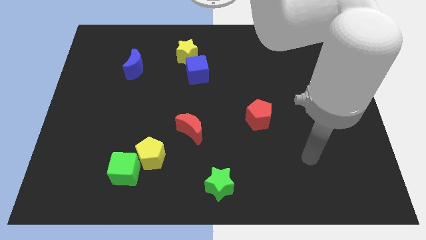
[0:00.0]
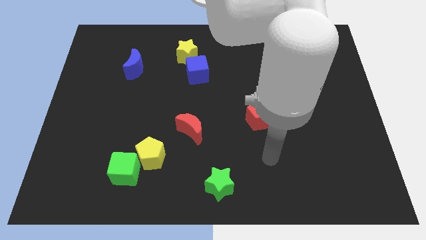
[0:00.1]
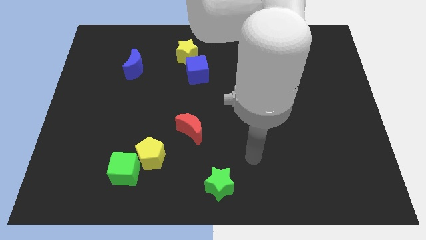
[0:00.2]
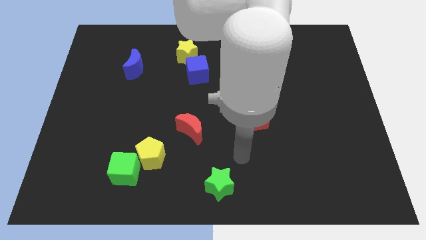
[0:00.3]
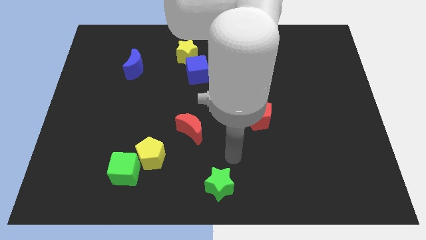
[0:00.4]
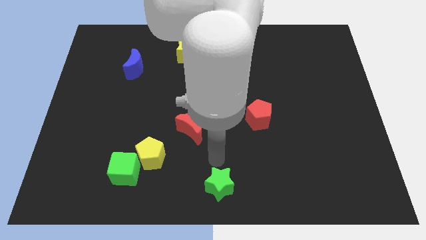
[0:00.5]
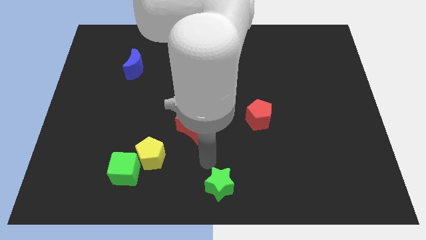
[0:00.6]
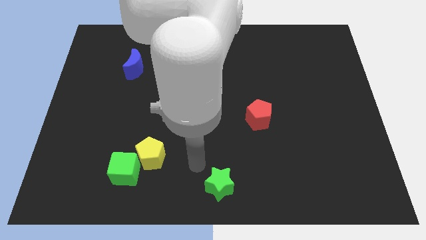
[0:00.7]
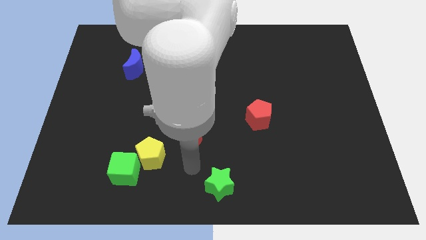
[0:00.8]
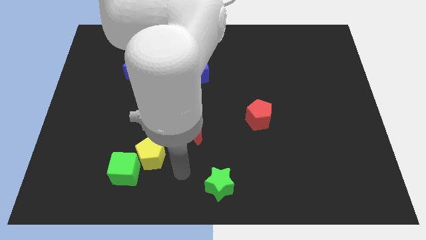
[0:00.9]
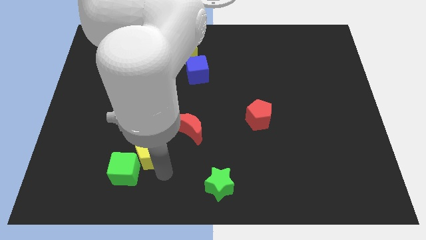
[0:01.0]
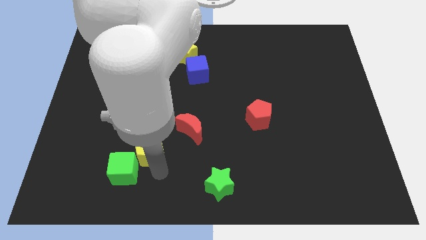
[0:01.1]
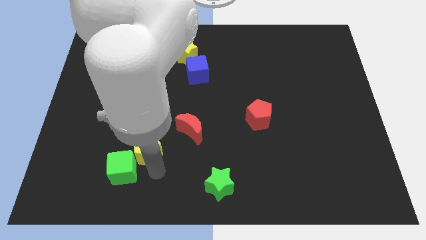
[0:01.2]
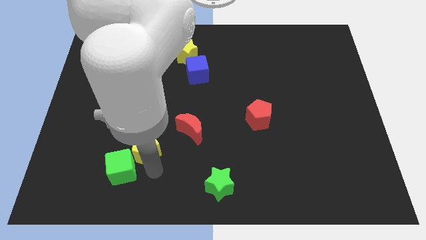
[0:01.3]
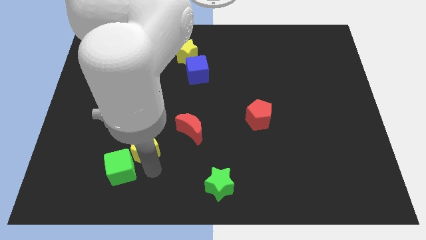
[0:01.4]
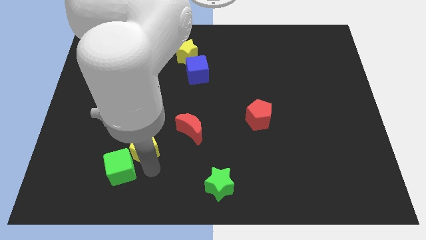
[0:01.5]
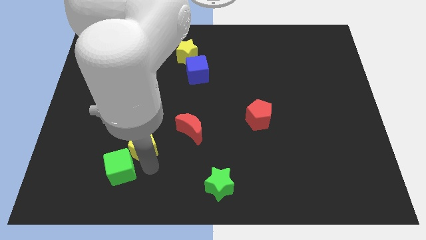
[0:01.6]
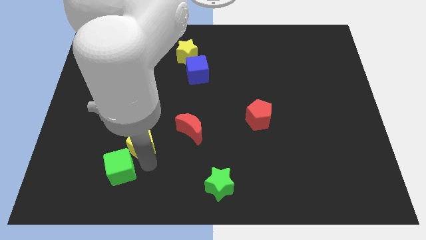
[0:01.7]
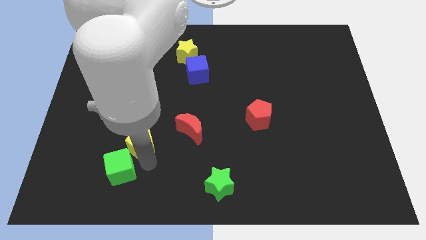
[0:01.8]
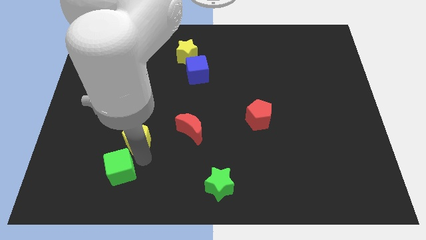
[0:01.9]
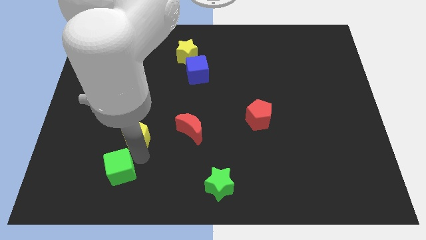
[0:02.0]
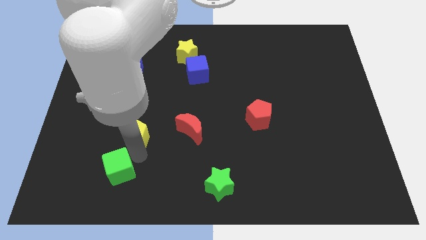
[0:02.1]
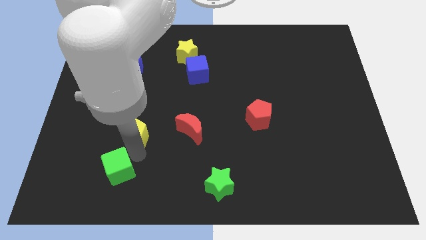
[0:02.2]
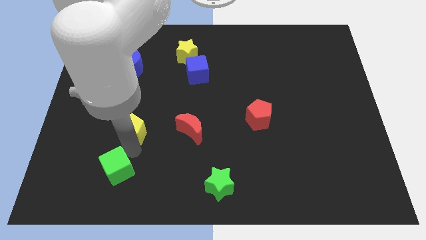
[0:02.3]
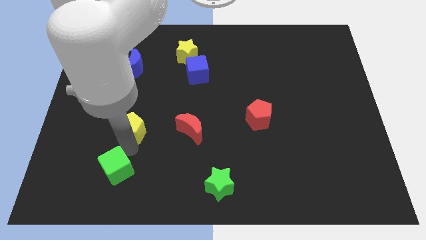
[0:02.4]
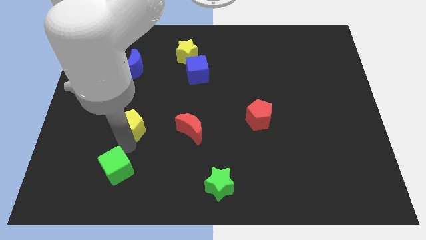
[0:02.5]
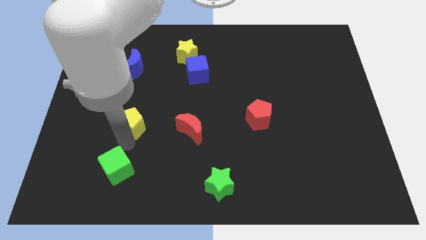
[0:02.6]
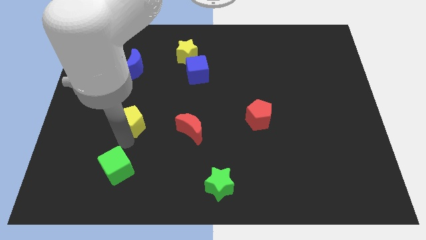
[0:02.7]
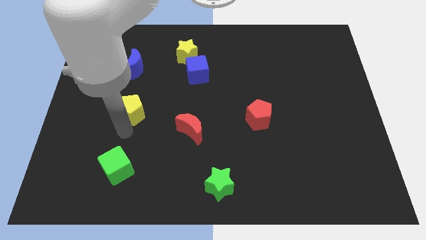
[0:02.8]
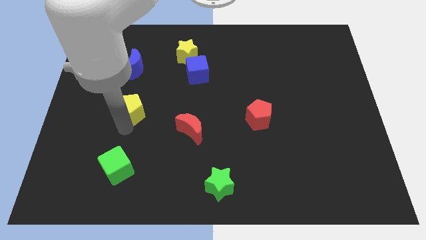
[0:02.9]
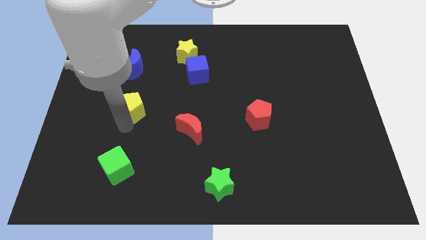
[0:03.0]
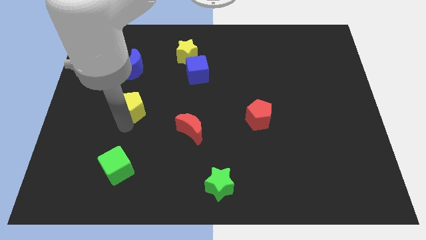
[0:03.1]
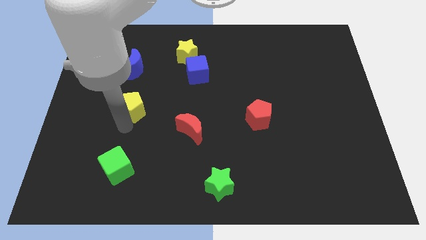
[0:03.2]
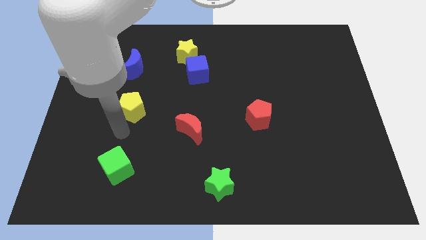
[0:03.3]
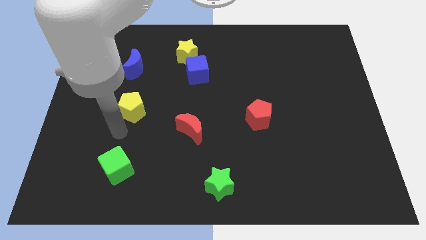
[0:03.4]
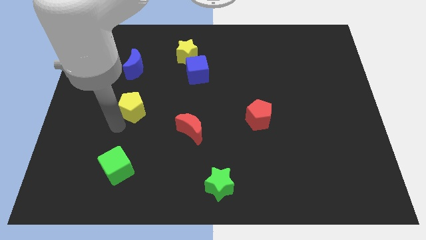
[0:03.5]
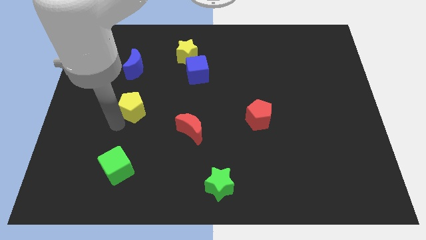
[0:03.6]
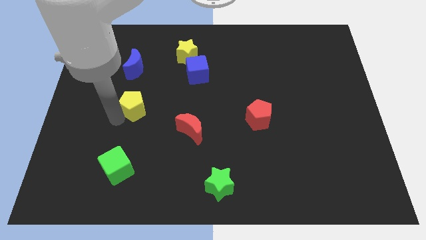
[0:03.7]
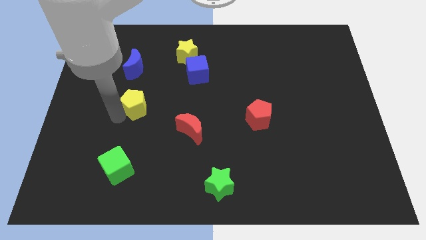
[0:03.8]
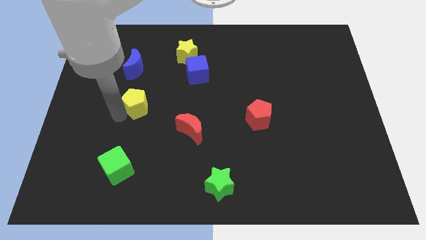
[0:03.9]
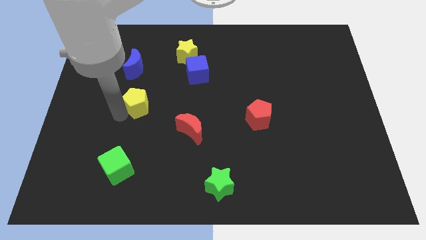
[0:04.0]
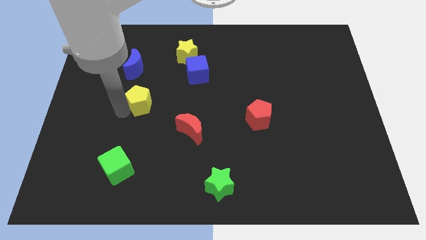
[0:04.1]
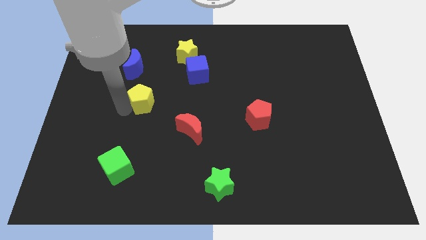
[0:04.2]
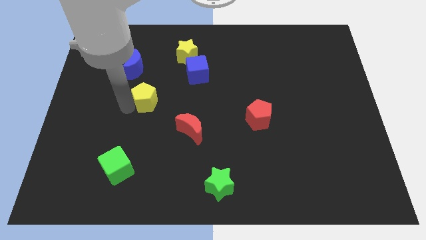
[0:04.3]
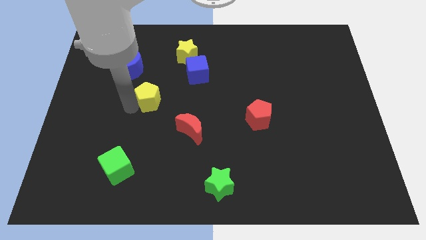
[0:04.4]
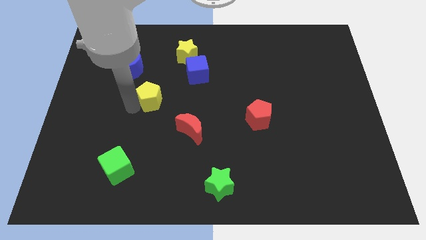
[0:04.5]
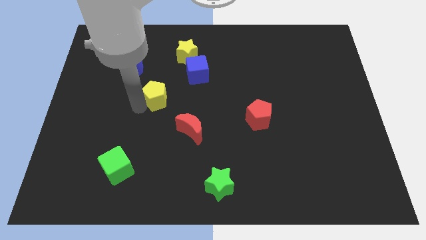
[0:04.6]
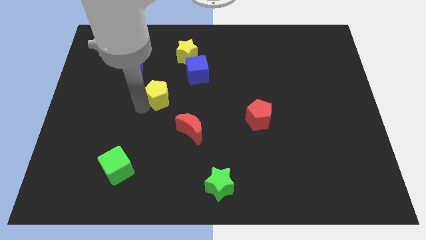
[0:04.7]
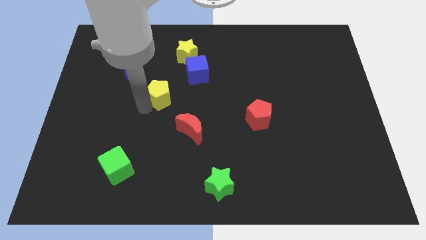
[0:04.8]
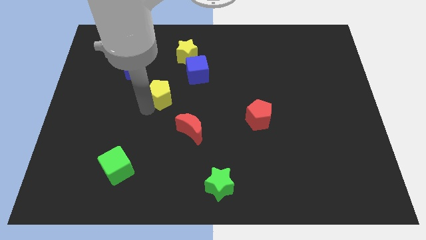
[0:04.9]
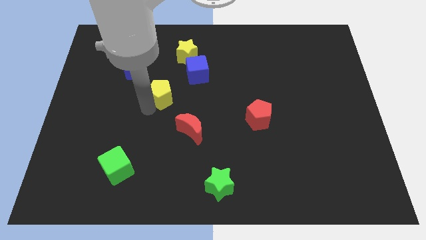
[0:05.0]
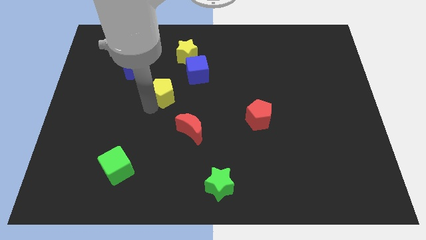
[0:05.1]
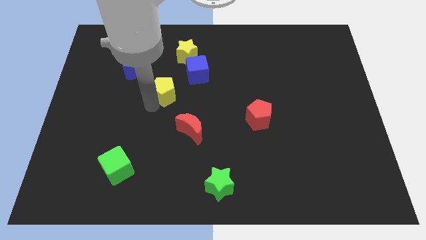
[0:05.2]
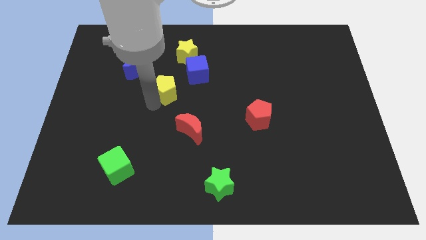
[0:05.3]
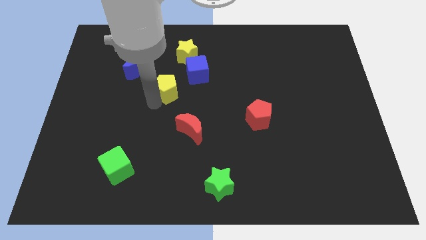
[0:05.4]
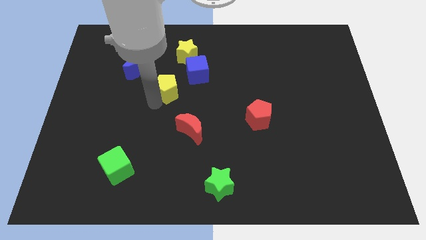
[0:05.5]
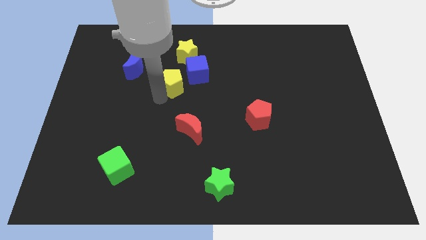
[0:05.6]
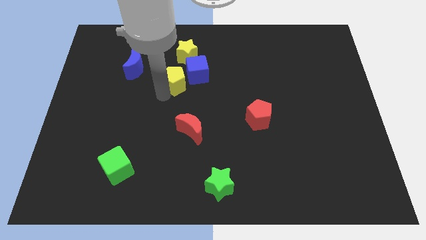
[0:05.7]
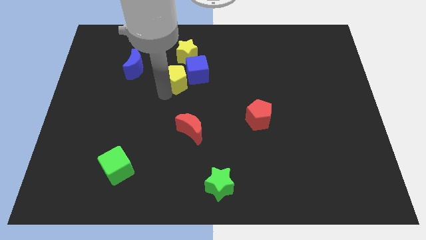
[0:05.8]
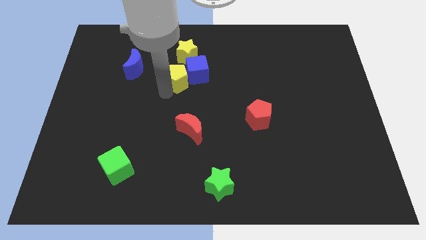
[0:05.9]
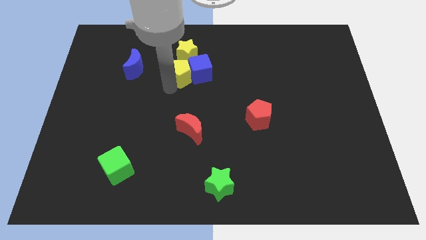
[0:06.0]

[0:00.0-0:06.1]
put the yellow pentagon towards the blue cube

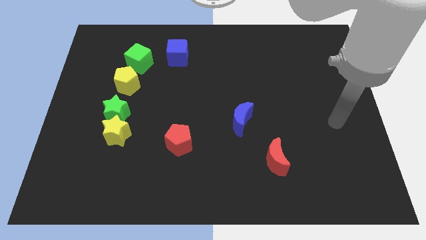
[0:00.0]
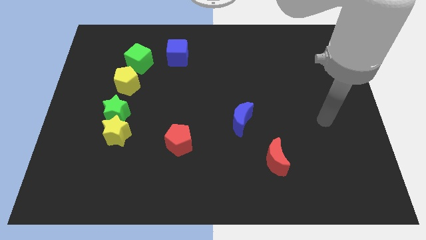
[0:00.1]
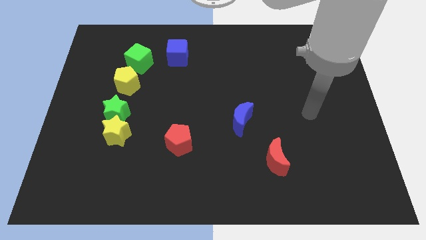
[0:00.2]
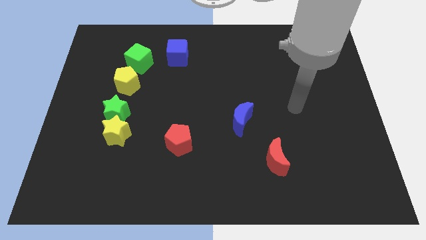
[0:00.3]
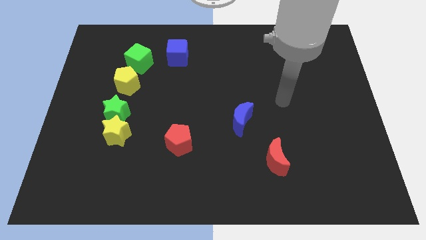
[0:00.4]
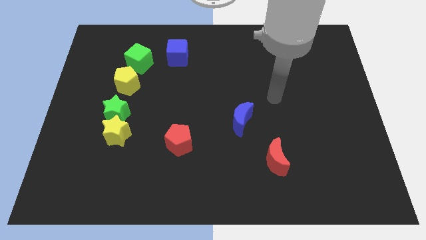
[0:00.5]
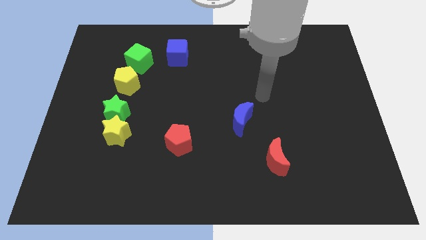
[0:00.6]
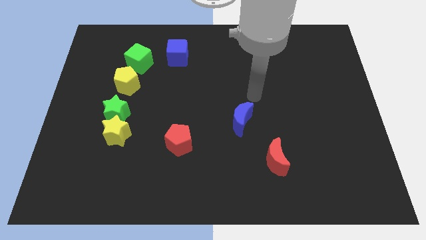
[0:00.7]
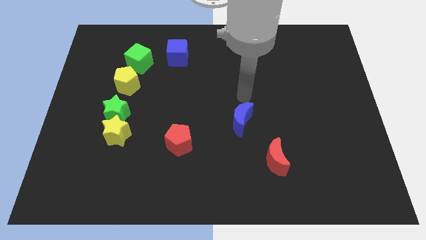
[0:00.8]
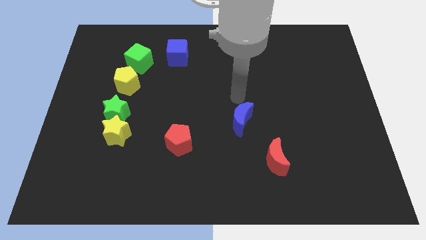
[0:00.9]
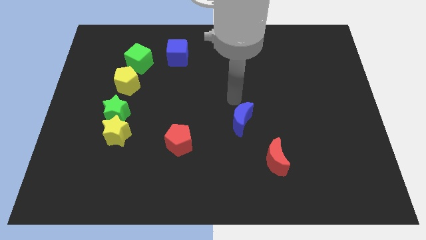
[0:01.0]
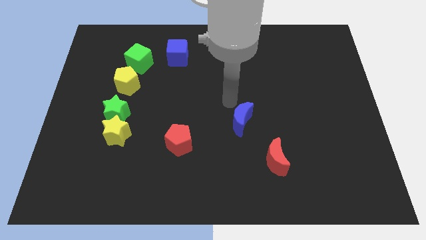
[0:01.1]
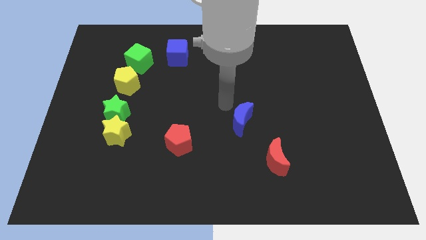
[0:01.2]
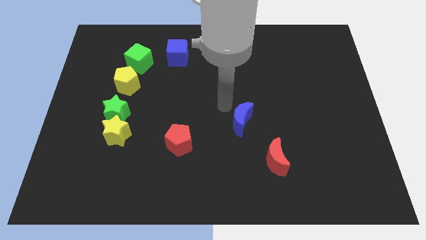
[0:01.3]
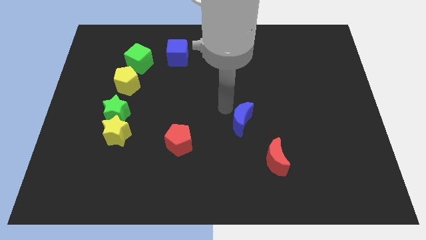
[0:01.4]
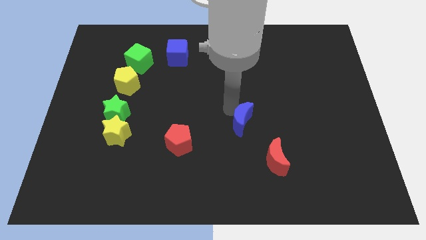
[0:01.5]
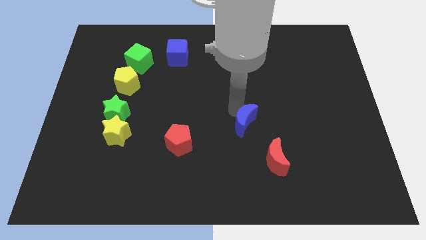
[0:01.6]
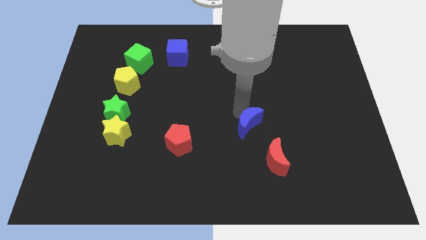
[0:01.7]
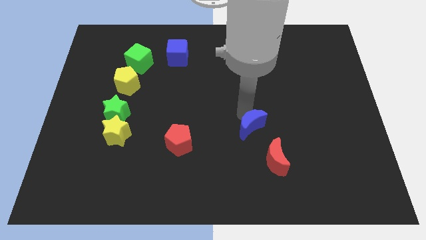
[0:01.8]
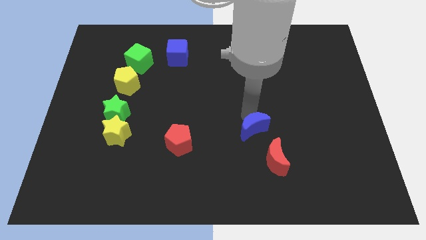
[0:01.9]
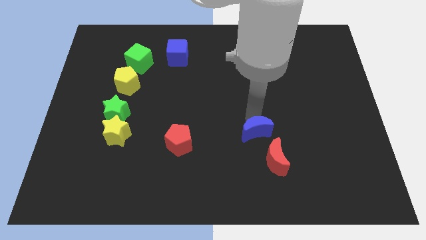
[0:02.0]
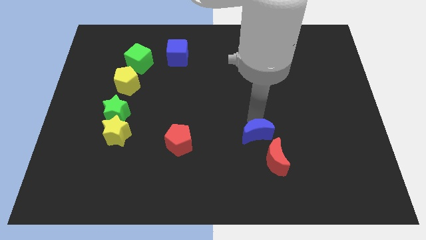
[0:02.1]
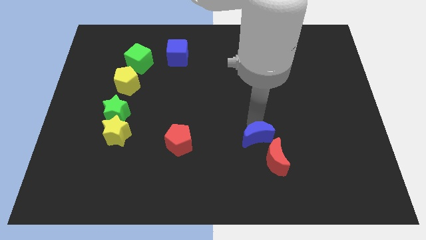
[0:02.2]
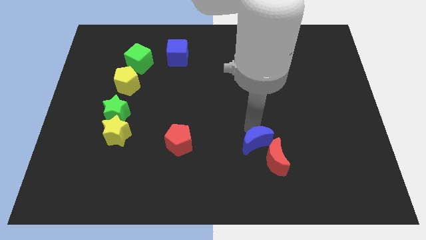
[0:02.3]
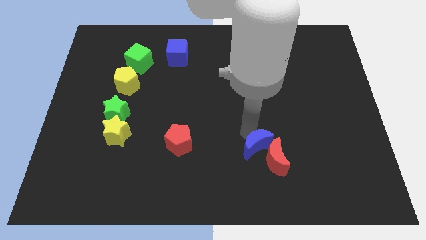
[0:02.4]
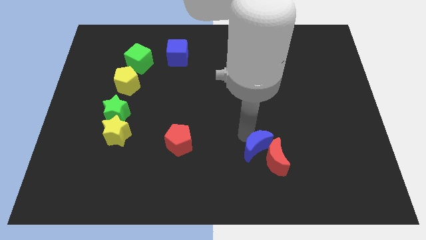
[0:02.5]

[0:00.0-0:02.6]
move the blue moon close to the red moon
